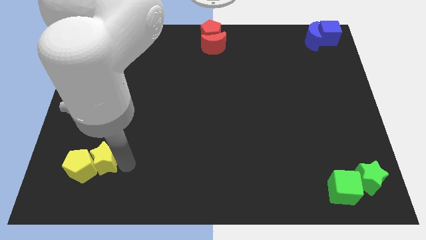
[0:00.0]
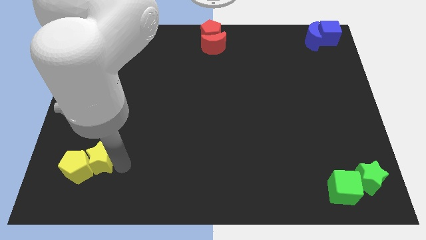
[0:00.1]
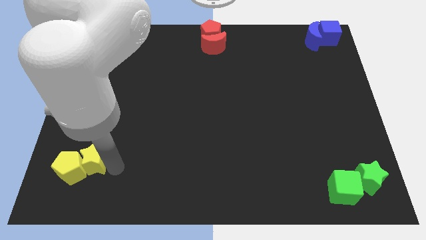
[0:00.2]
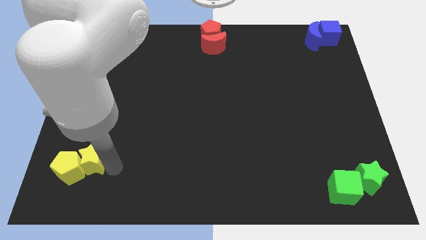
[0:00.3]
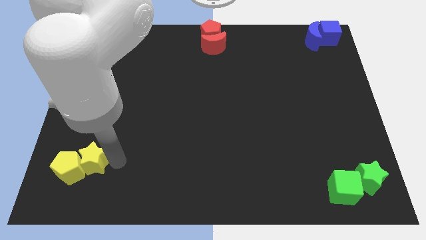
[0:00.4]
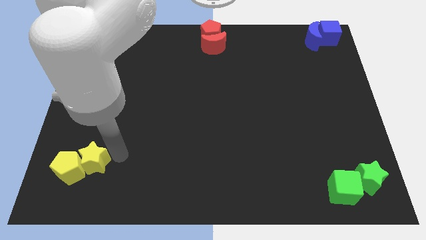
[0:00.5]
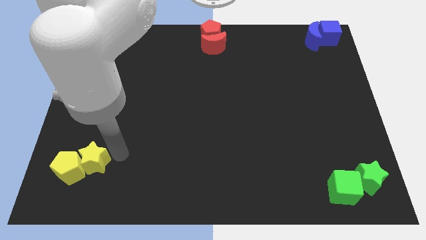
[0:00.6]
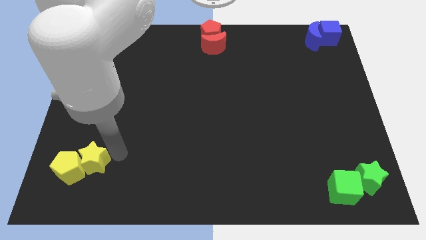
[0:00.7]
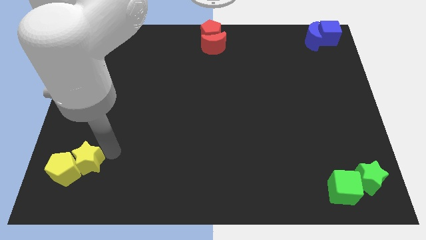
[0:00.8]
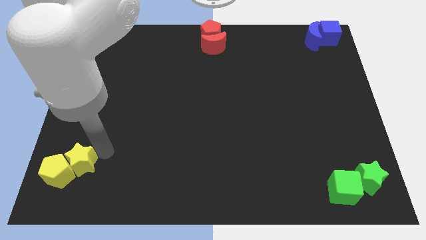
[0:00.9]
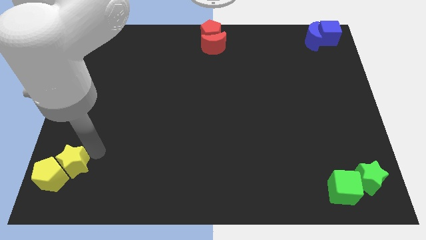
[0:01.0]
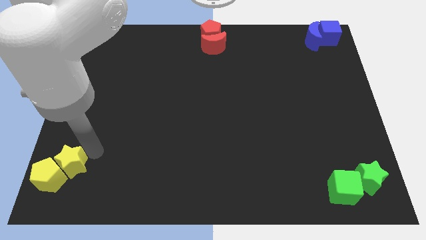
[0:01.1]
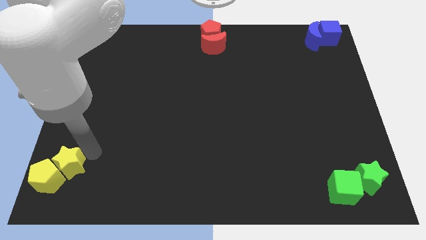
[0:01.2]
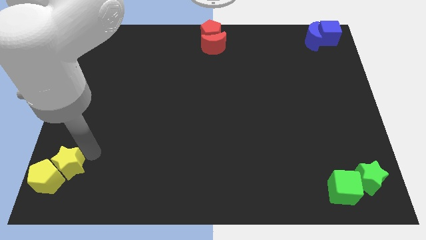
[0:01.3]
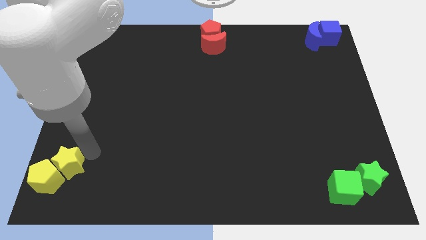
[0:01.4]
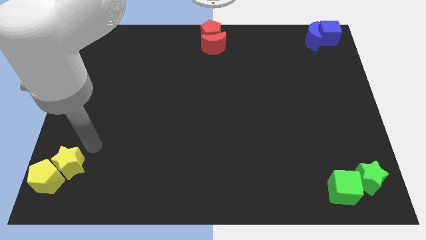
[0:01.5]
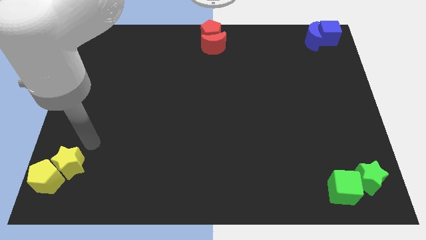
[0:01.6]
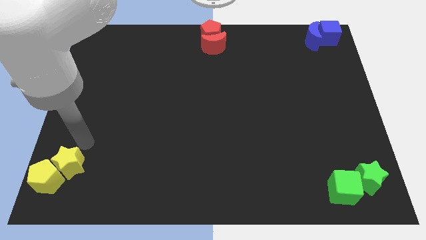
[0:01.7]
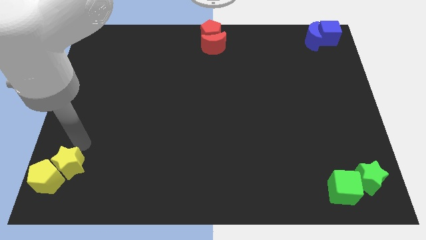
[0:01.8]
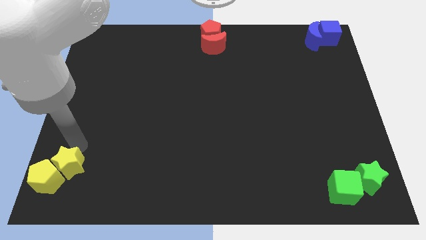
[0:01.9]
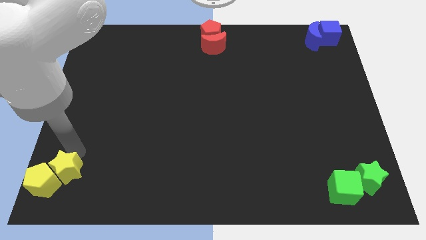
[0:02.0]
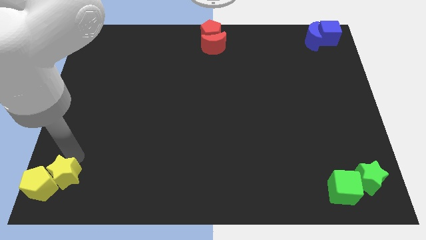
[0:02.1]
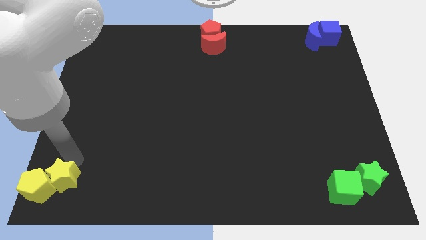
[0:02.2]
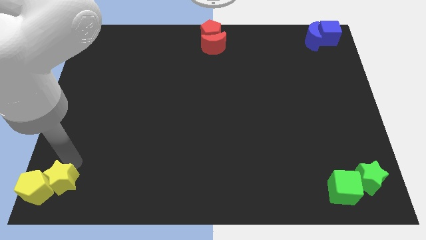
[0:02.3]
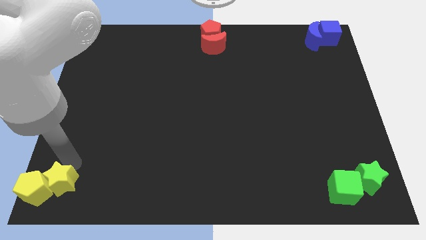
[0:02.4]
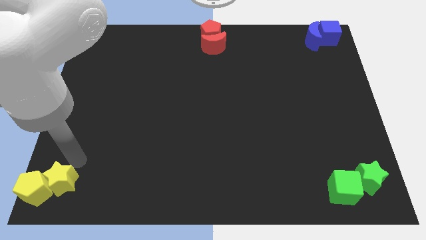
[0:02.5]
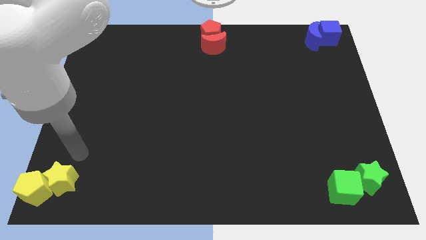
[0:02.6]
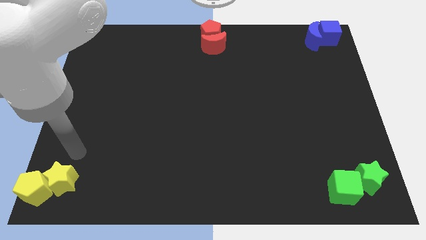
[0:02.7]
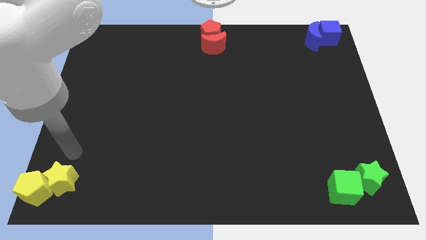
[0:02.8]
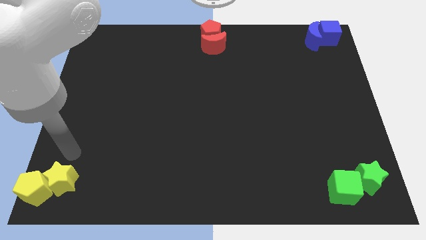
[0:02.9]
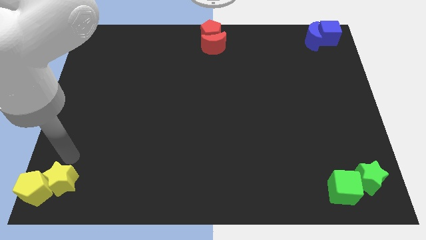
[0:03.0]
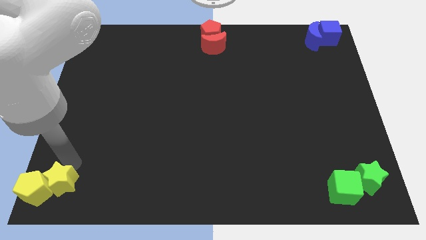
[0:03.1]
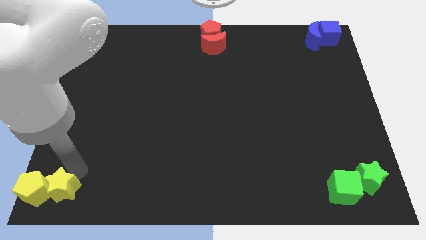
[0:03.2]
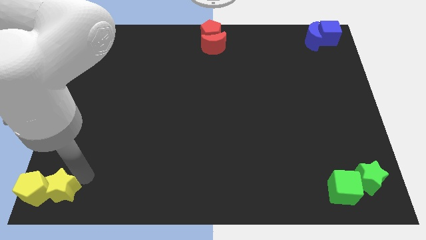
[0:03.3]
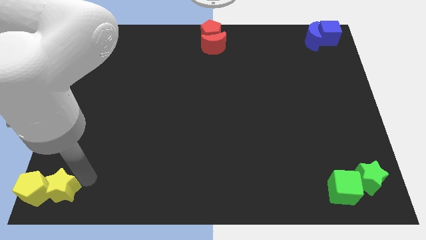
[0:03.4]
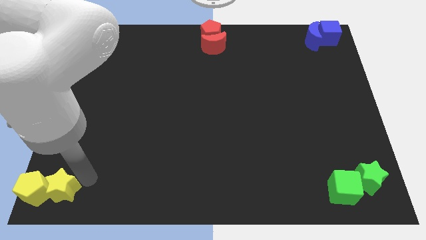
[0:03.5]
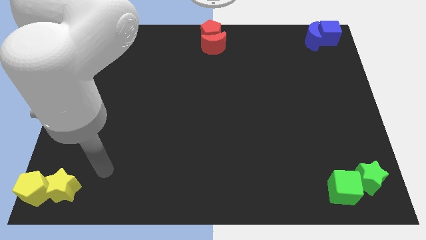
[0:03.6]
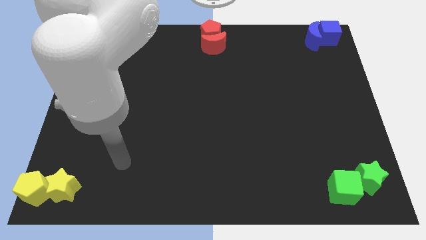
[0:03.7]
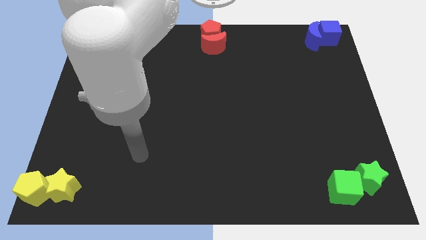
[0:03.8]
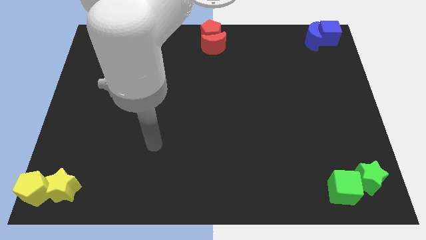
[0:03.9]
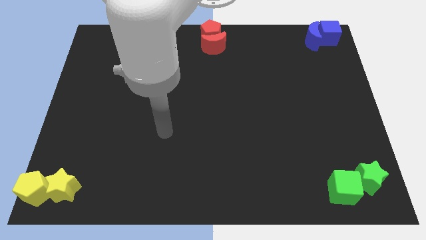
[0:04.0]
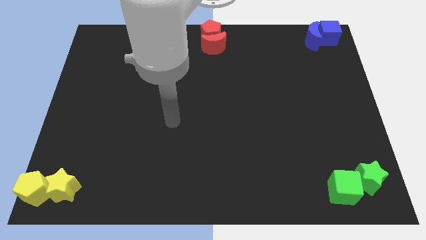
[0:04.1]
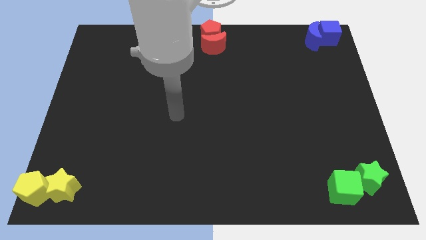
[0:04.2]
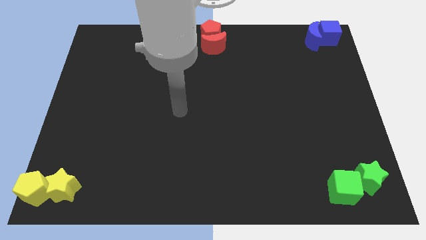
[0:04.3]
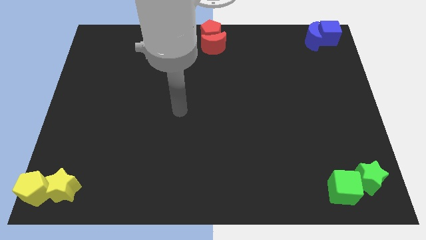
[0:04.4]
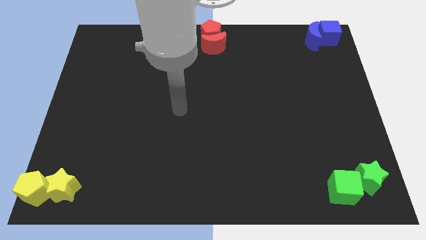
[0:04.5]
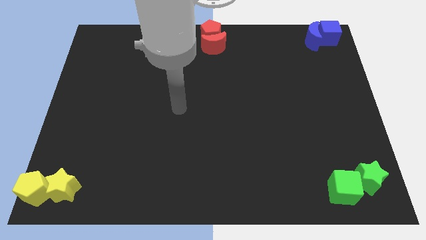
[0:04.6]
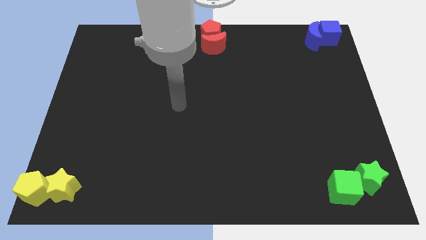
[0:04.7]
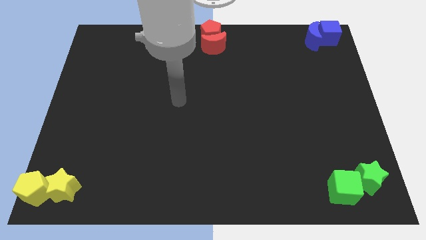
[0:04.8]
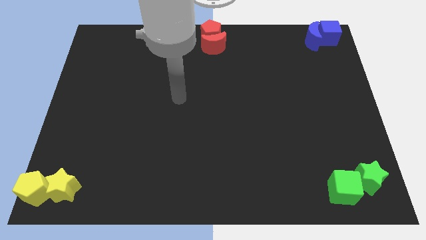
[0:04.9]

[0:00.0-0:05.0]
move the yellow blocks to the bottom left corner

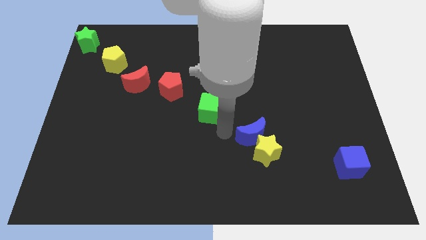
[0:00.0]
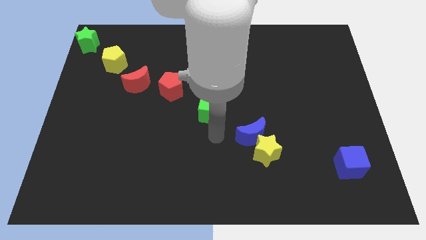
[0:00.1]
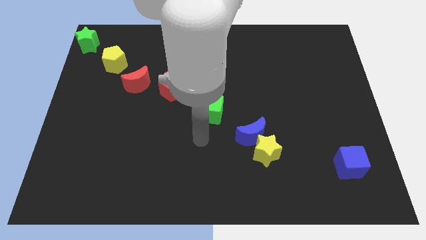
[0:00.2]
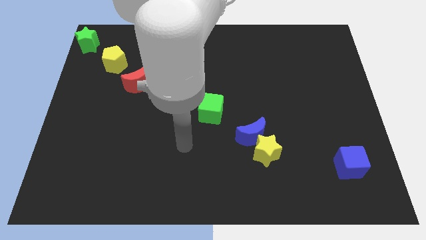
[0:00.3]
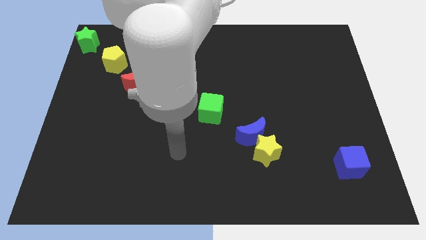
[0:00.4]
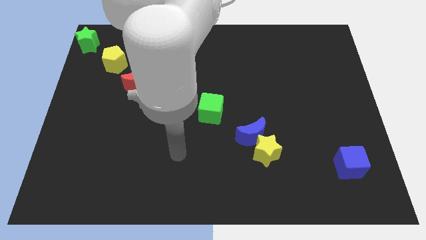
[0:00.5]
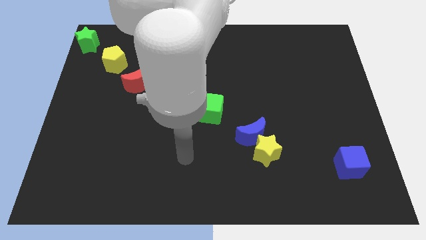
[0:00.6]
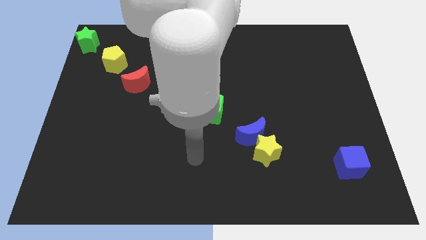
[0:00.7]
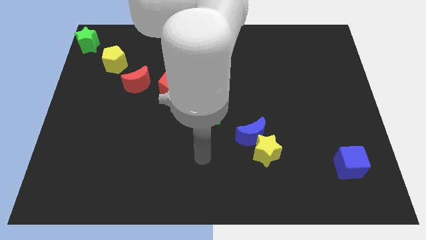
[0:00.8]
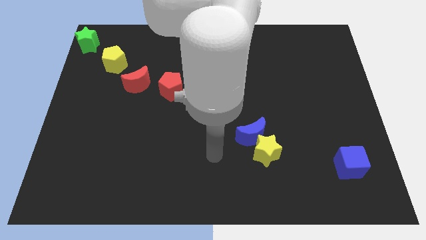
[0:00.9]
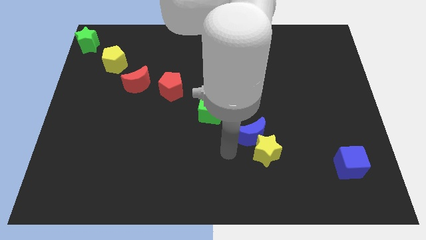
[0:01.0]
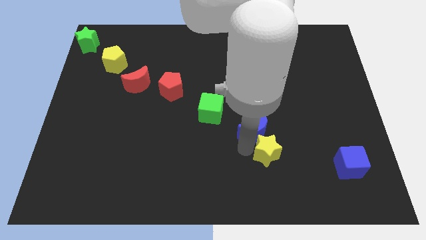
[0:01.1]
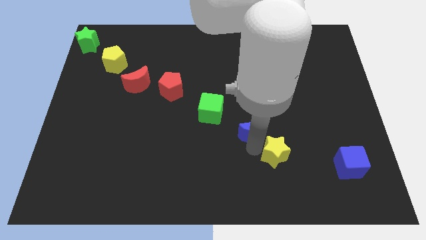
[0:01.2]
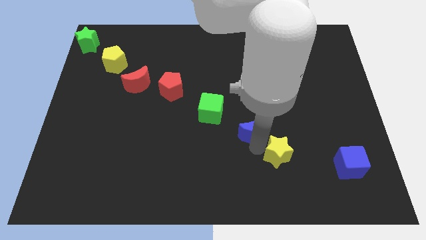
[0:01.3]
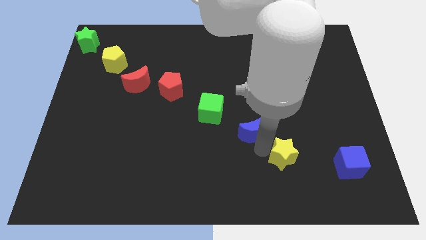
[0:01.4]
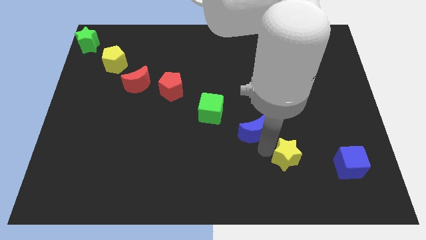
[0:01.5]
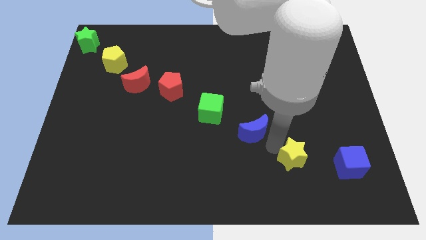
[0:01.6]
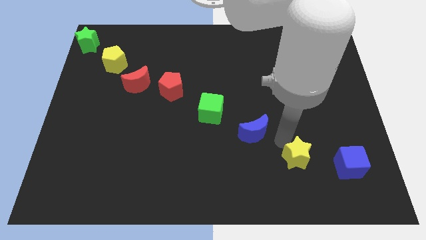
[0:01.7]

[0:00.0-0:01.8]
separate blue crescent and yellow star

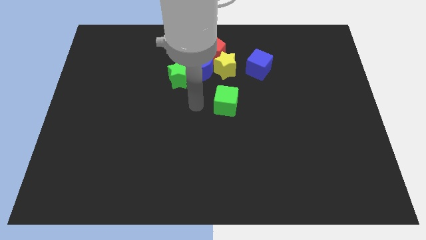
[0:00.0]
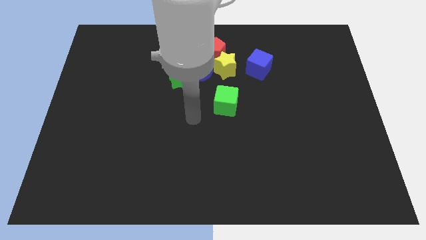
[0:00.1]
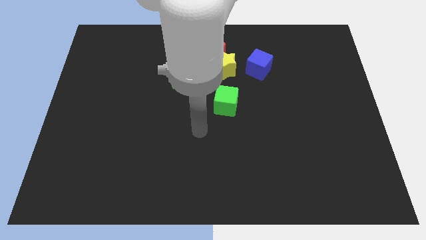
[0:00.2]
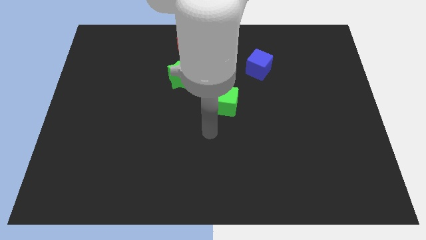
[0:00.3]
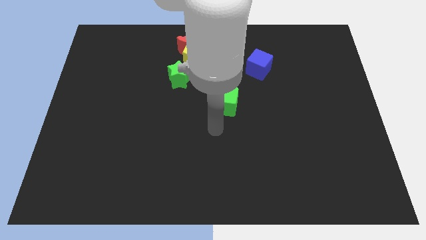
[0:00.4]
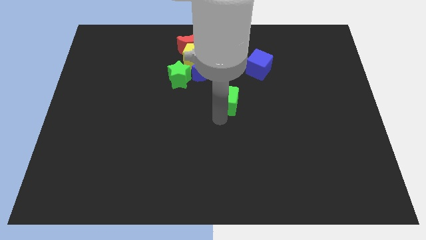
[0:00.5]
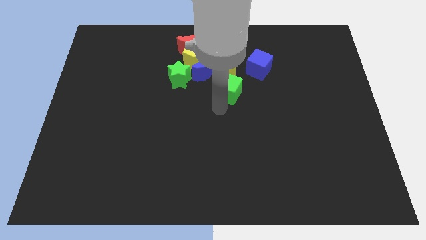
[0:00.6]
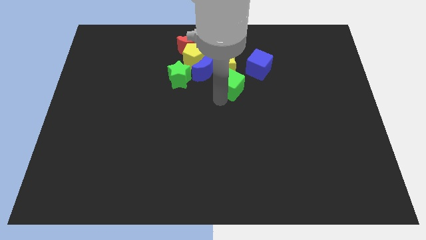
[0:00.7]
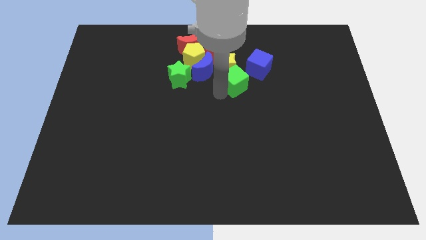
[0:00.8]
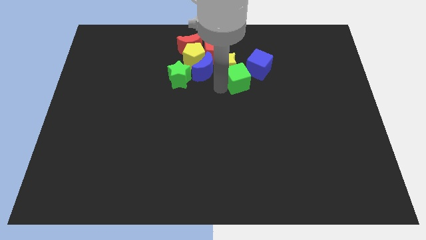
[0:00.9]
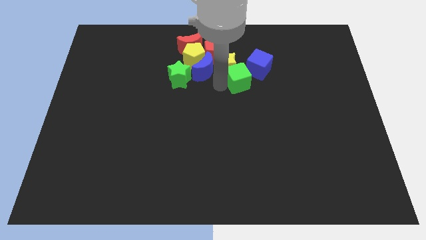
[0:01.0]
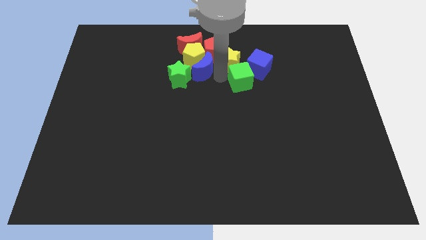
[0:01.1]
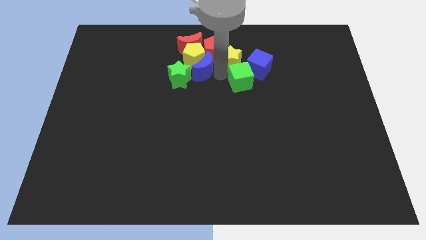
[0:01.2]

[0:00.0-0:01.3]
move the green cube into the bottom side of the blue cube

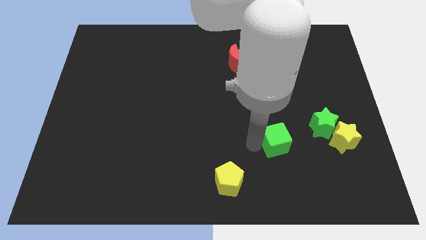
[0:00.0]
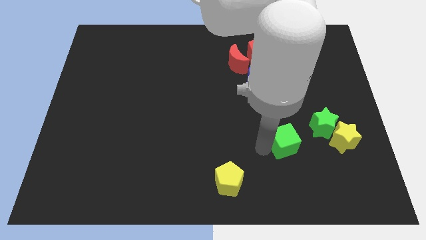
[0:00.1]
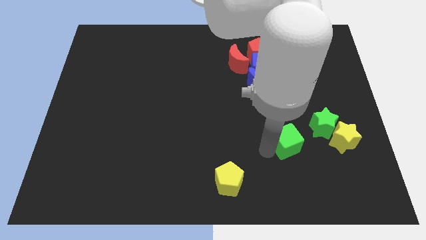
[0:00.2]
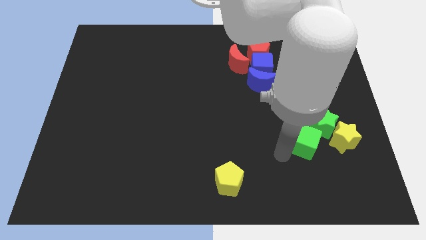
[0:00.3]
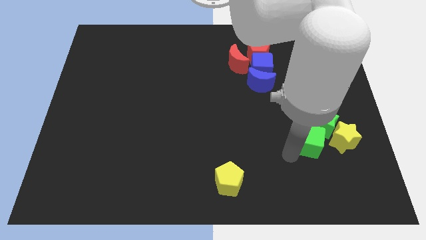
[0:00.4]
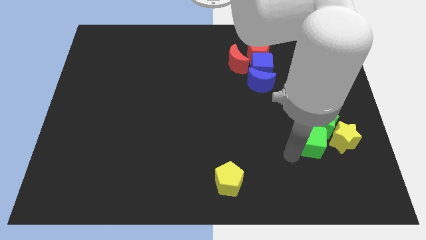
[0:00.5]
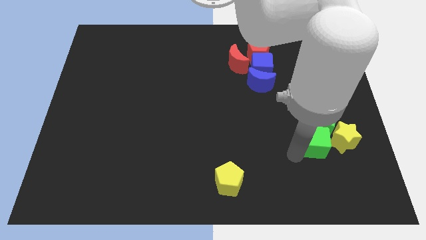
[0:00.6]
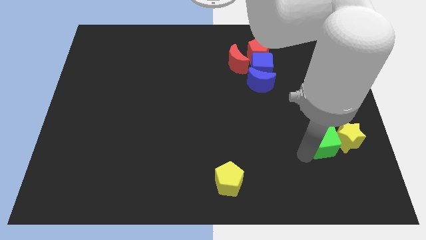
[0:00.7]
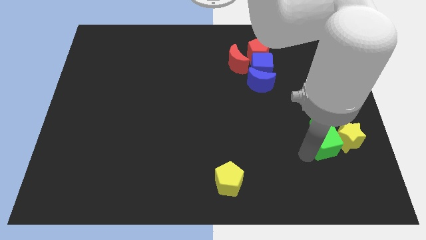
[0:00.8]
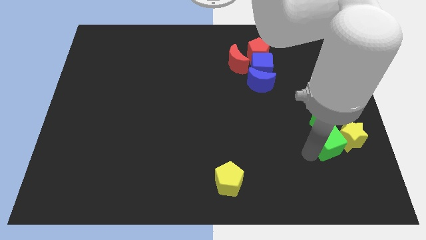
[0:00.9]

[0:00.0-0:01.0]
move the green cube to the left side of the yellow star
